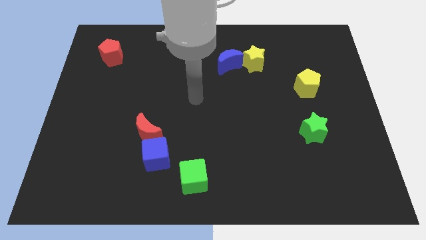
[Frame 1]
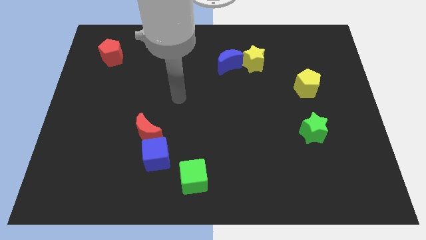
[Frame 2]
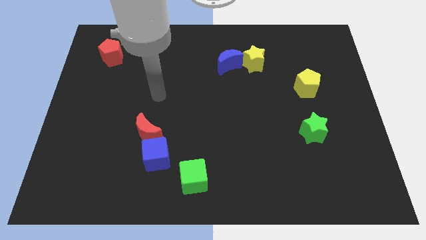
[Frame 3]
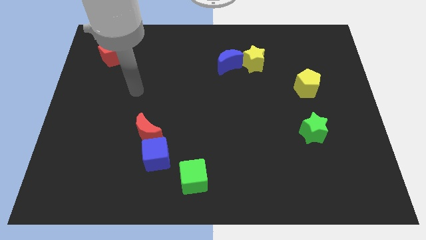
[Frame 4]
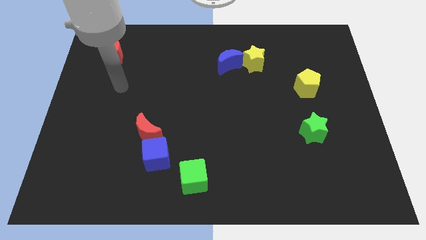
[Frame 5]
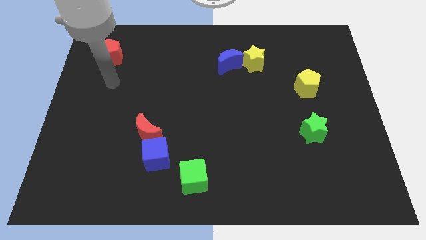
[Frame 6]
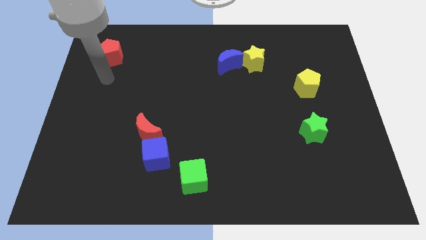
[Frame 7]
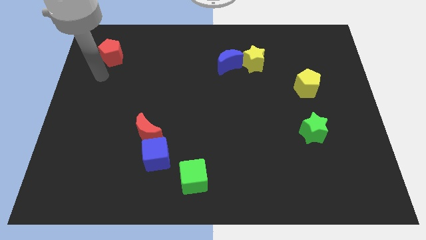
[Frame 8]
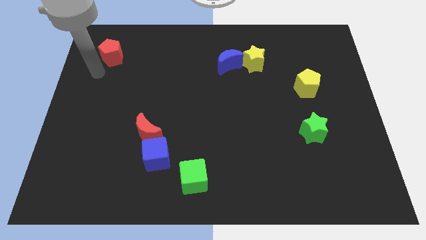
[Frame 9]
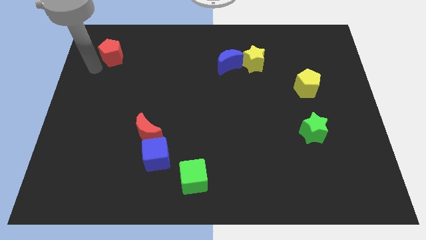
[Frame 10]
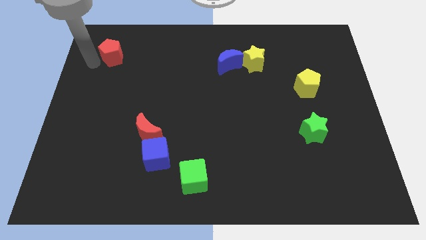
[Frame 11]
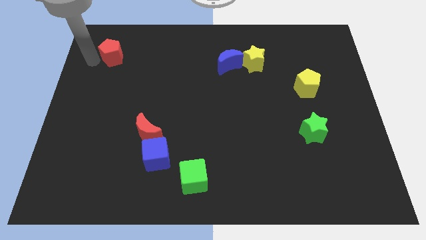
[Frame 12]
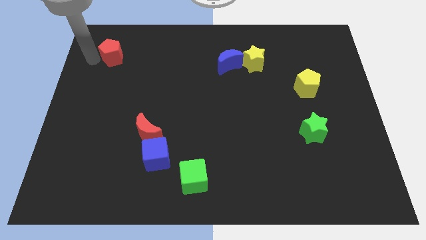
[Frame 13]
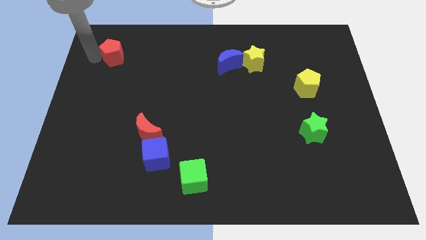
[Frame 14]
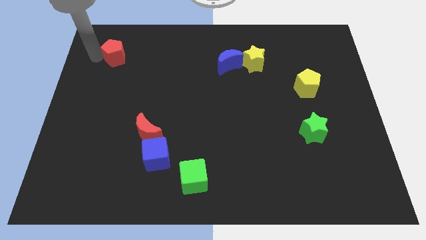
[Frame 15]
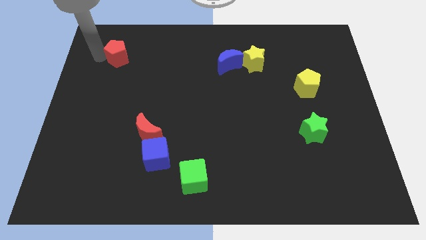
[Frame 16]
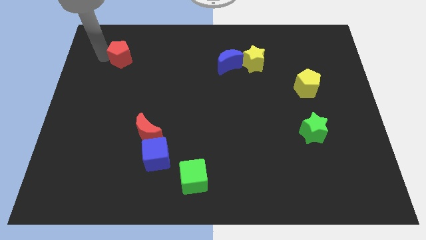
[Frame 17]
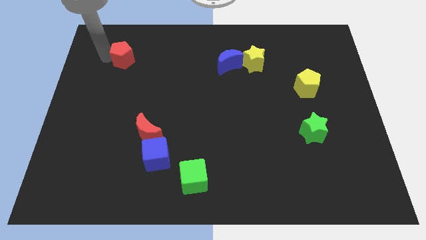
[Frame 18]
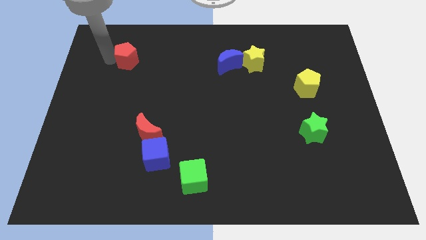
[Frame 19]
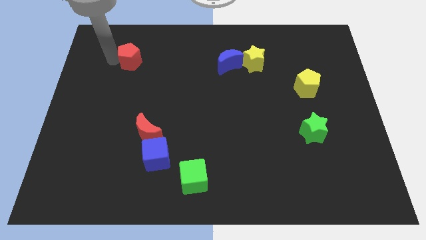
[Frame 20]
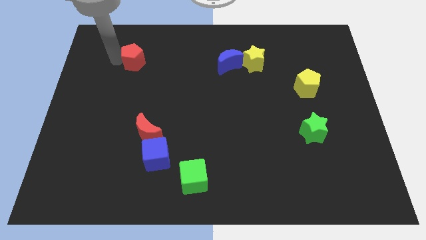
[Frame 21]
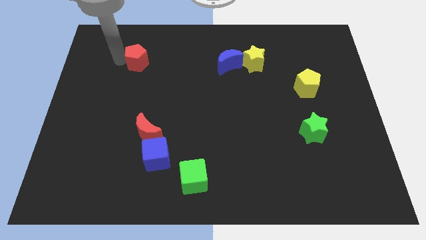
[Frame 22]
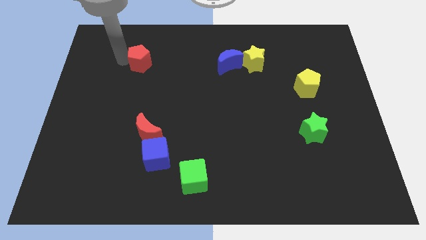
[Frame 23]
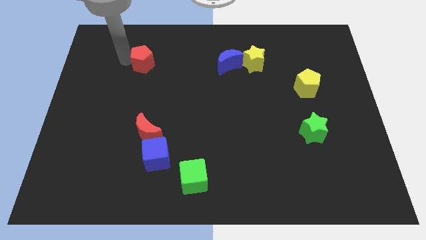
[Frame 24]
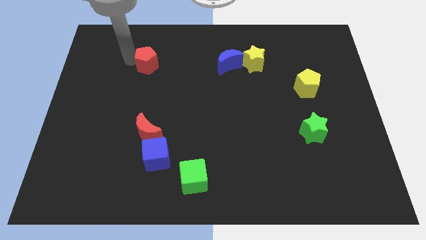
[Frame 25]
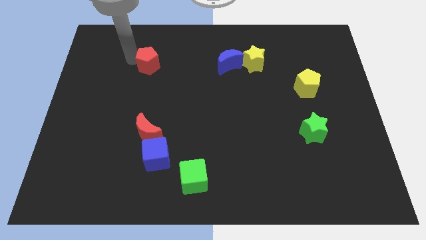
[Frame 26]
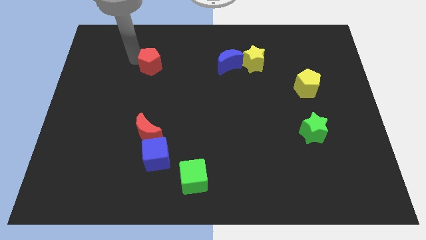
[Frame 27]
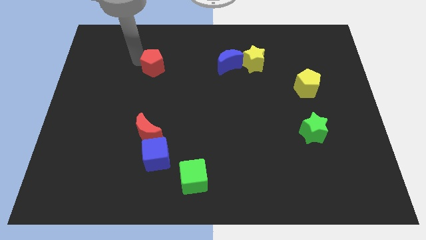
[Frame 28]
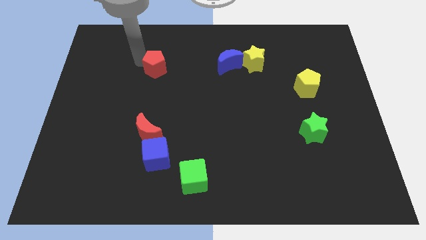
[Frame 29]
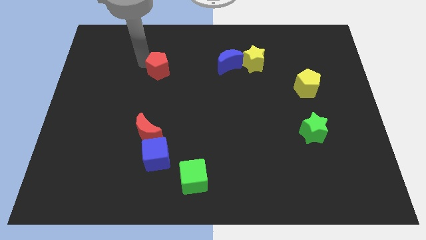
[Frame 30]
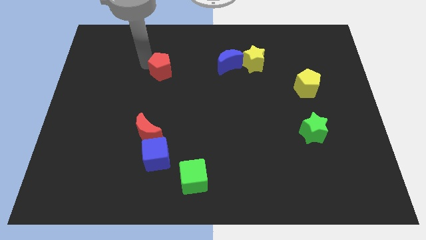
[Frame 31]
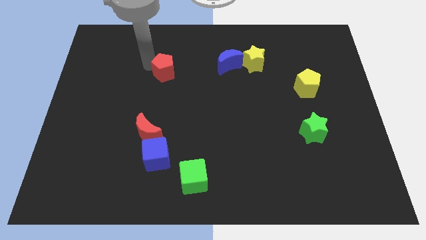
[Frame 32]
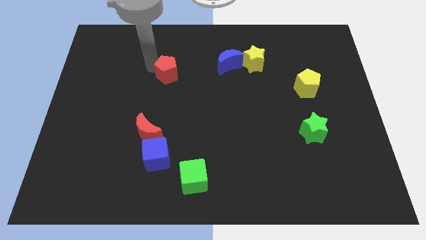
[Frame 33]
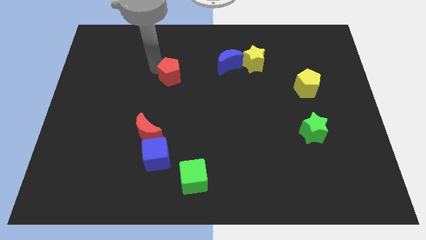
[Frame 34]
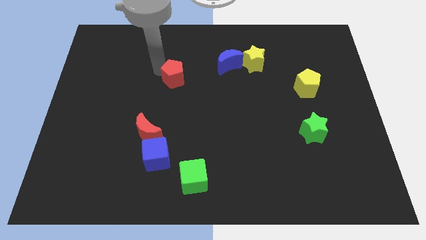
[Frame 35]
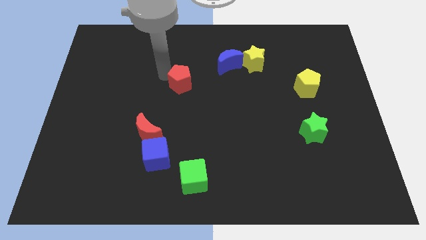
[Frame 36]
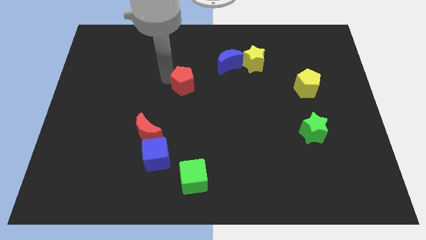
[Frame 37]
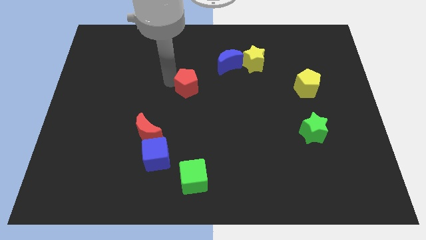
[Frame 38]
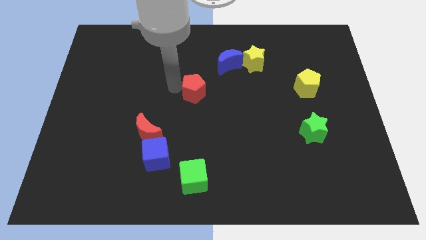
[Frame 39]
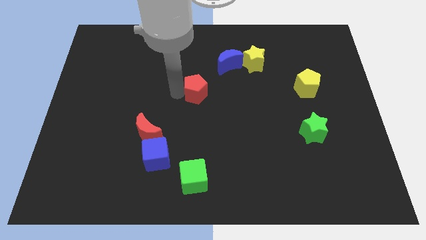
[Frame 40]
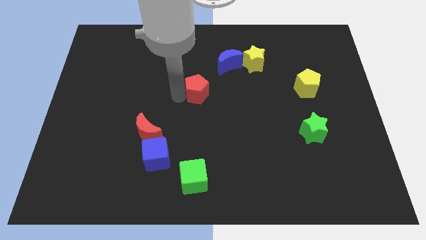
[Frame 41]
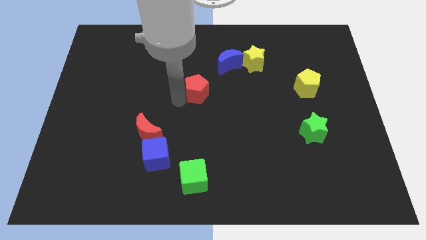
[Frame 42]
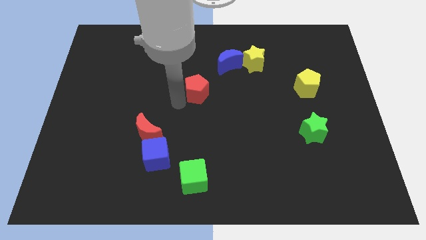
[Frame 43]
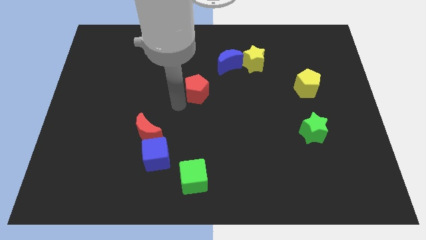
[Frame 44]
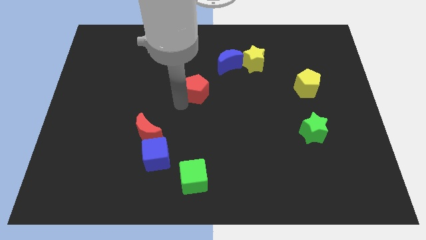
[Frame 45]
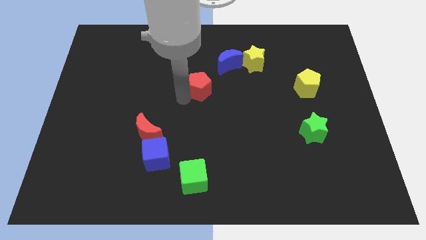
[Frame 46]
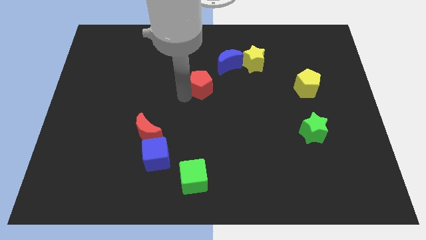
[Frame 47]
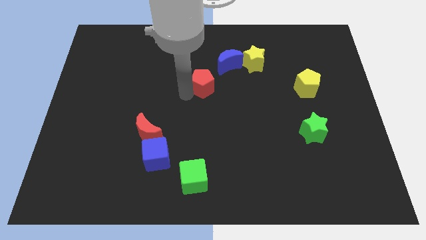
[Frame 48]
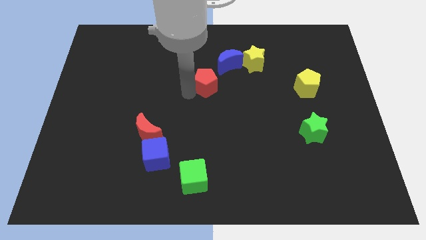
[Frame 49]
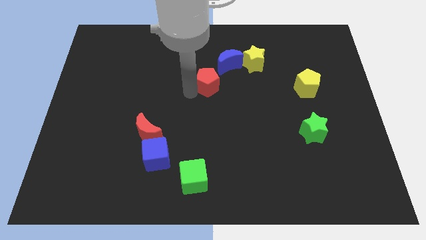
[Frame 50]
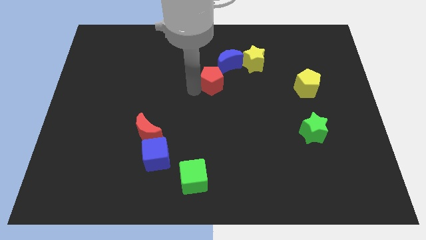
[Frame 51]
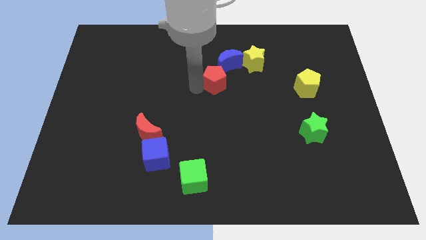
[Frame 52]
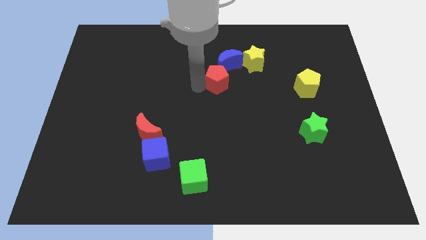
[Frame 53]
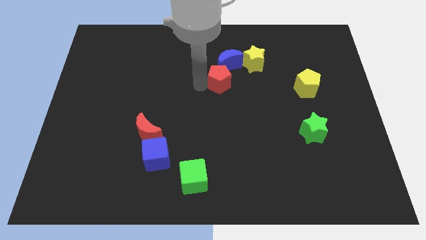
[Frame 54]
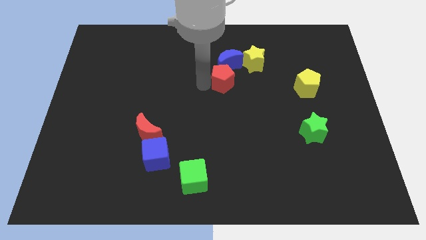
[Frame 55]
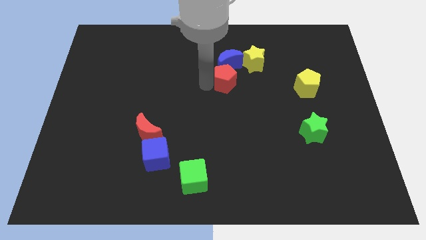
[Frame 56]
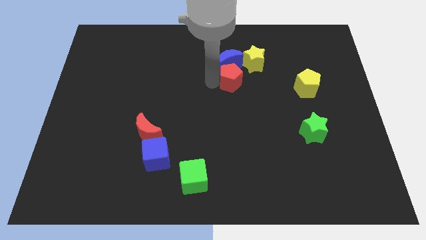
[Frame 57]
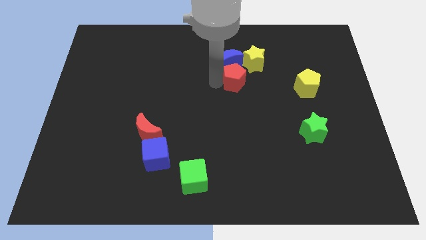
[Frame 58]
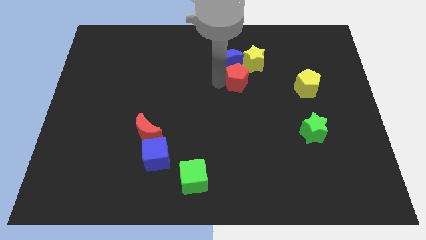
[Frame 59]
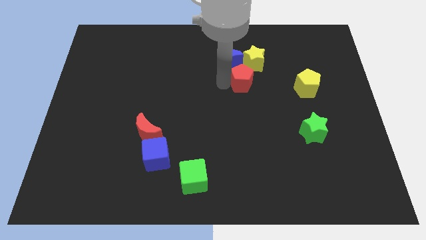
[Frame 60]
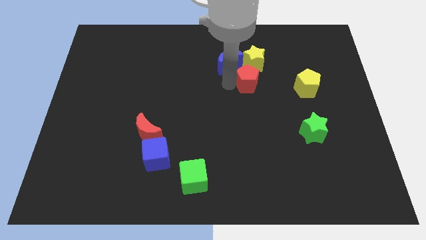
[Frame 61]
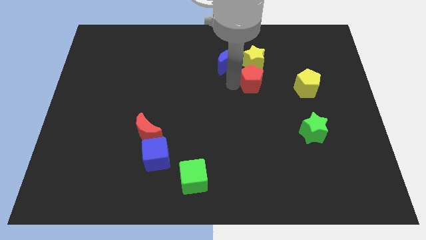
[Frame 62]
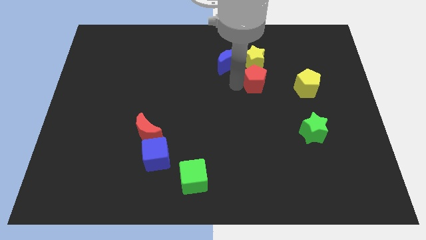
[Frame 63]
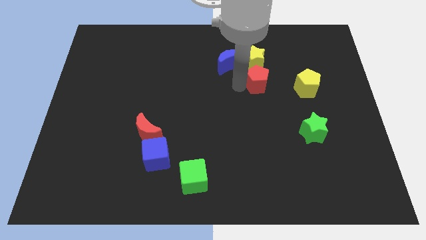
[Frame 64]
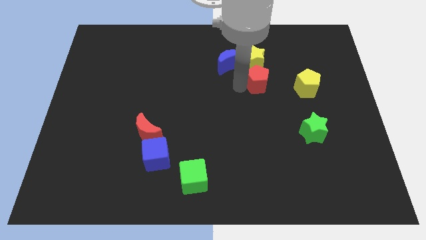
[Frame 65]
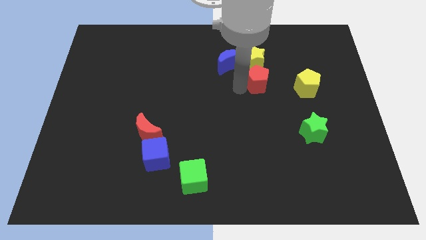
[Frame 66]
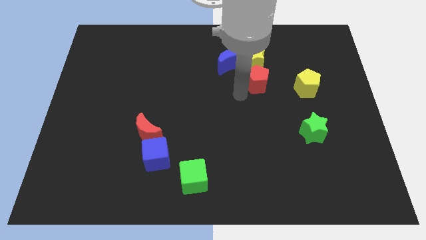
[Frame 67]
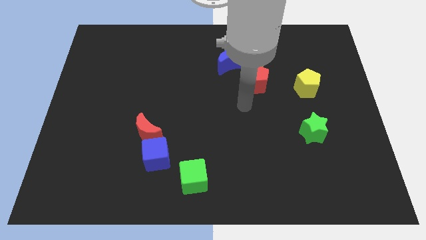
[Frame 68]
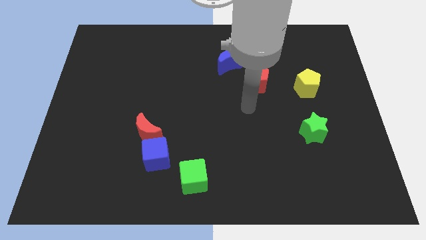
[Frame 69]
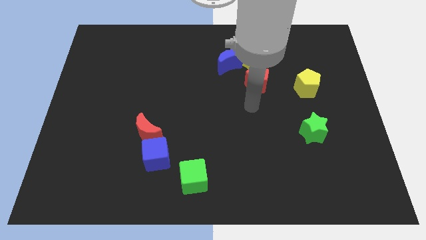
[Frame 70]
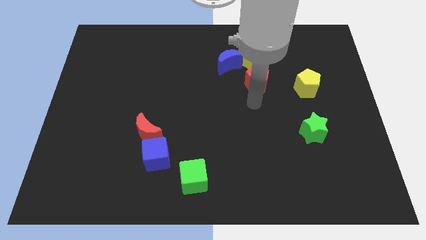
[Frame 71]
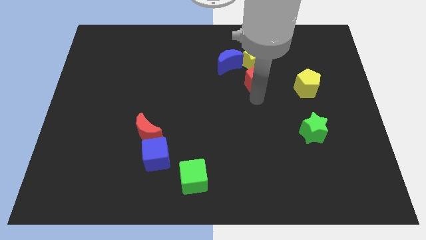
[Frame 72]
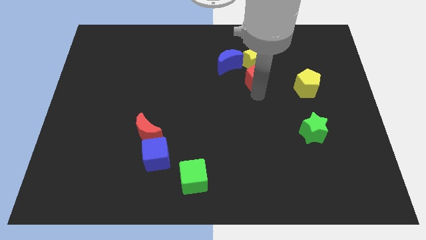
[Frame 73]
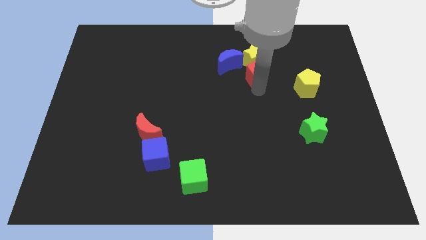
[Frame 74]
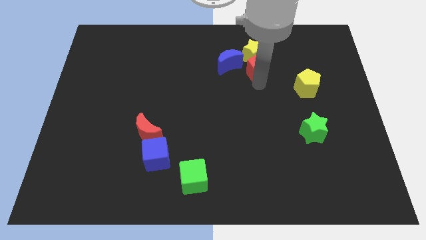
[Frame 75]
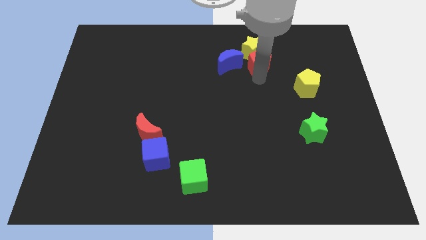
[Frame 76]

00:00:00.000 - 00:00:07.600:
slide the red pentagon next to the yellow star

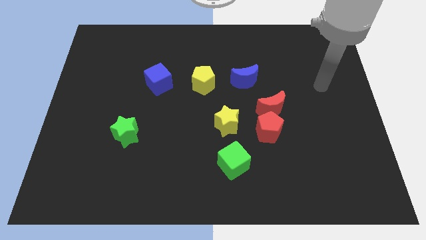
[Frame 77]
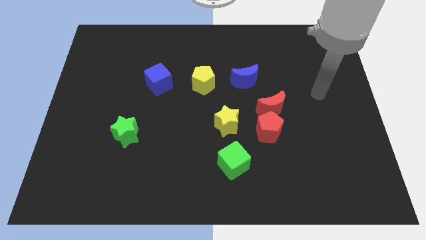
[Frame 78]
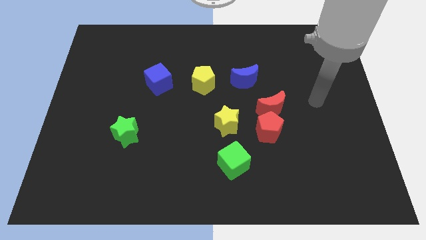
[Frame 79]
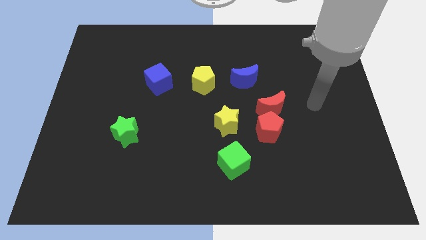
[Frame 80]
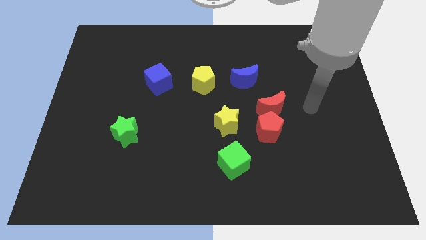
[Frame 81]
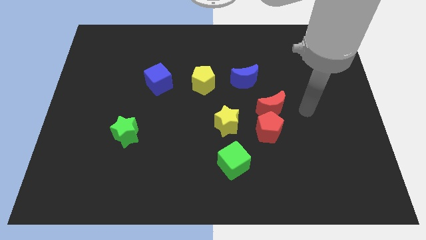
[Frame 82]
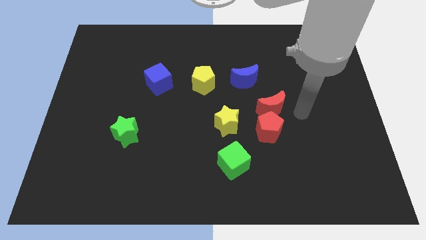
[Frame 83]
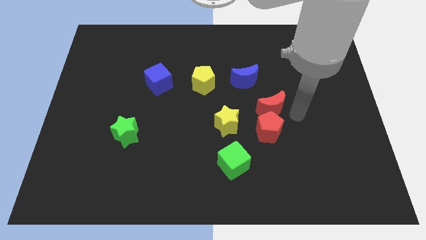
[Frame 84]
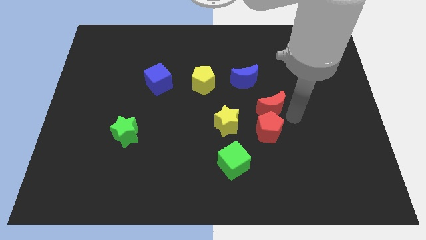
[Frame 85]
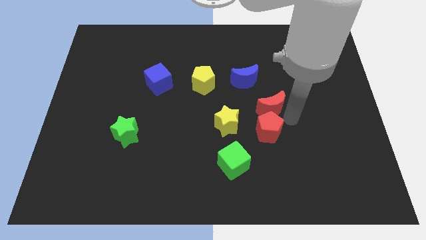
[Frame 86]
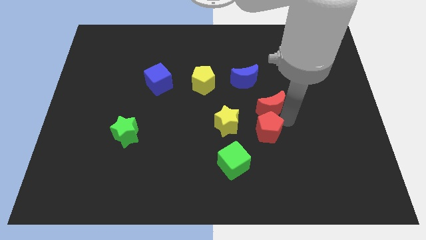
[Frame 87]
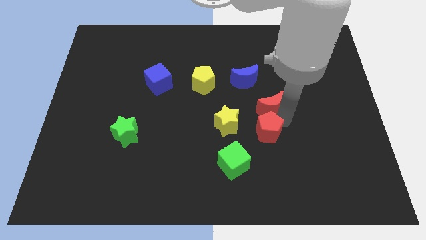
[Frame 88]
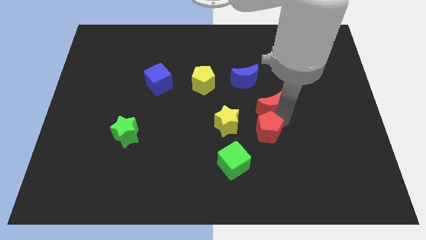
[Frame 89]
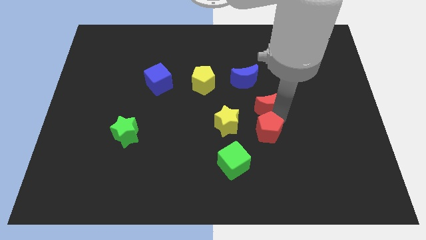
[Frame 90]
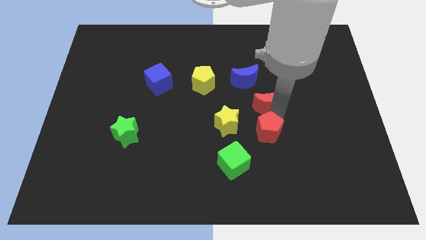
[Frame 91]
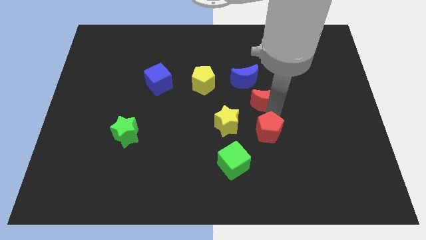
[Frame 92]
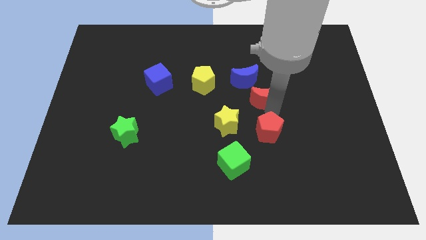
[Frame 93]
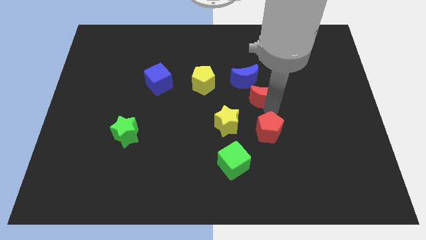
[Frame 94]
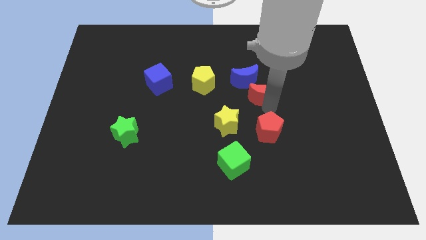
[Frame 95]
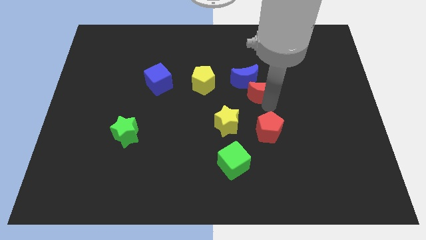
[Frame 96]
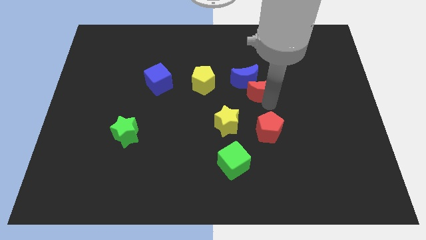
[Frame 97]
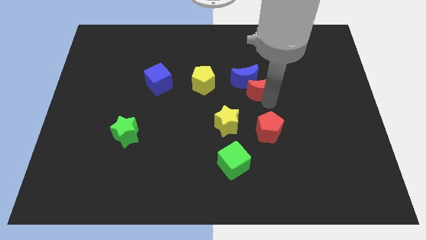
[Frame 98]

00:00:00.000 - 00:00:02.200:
slide the red moon close to the blue moon
